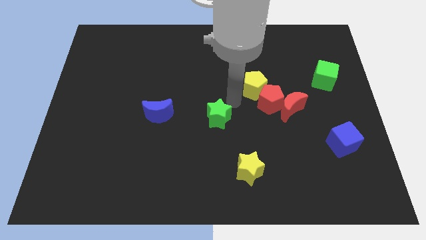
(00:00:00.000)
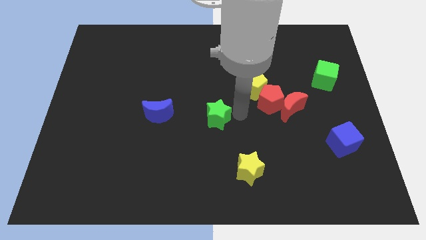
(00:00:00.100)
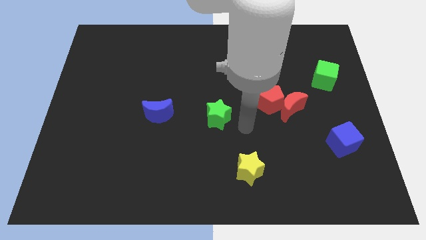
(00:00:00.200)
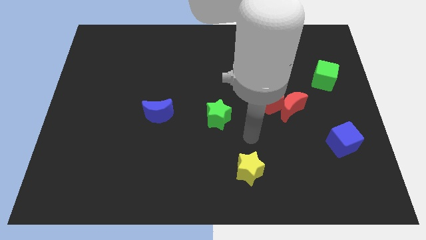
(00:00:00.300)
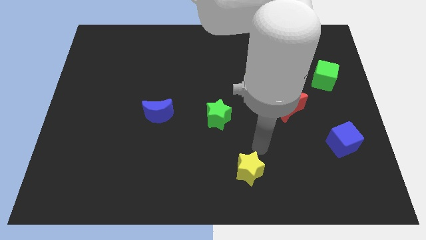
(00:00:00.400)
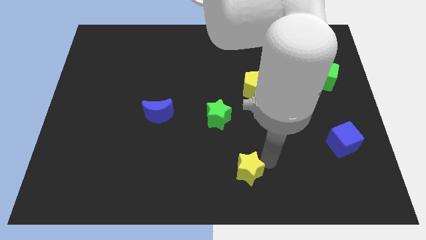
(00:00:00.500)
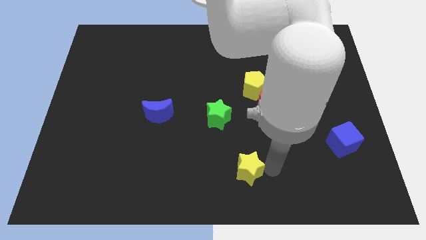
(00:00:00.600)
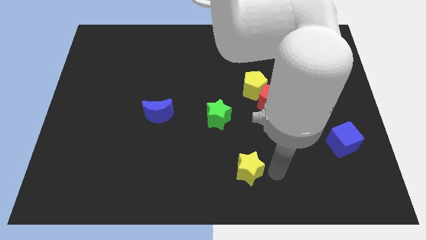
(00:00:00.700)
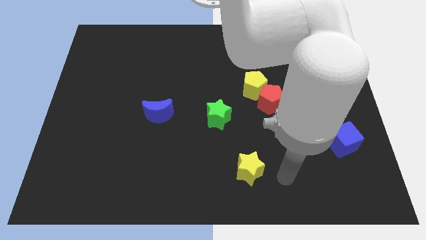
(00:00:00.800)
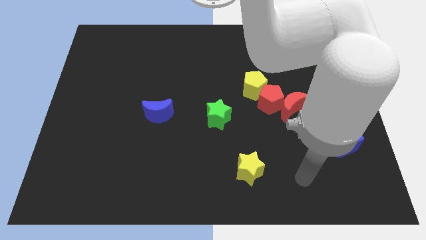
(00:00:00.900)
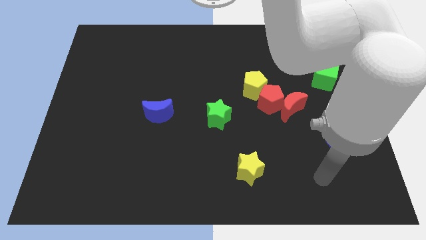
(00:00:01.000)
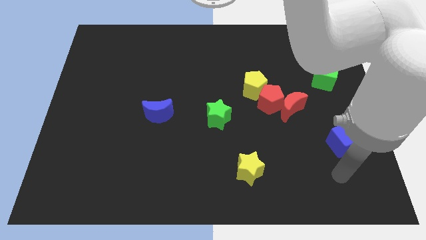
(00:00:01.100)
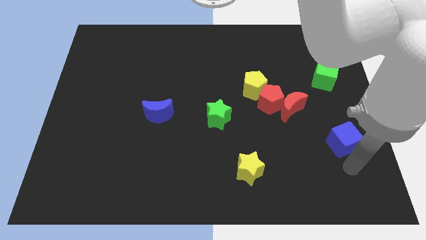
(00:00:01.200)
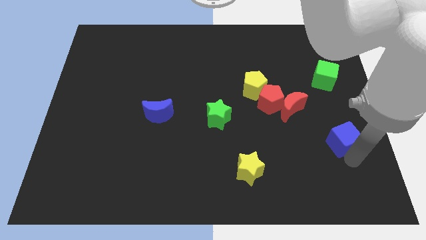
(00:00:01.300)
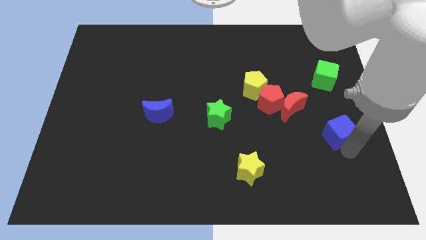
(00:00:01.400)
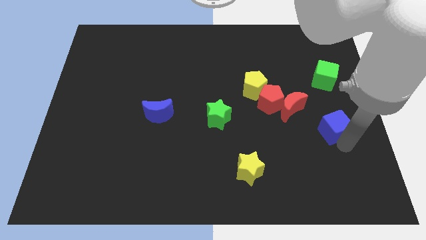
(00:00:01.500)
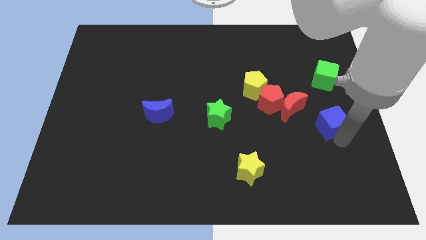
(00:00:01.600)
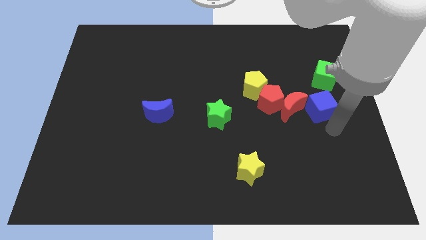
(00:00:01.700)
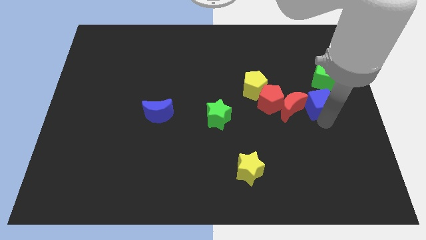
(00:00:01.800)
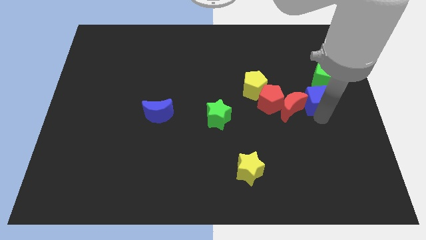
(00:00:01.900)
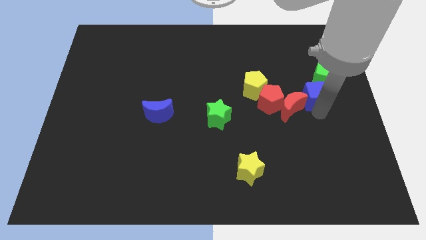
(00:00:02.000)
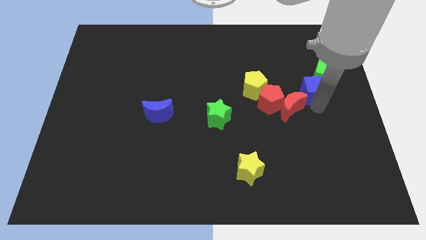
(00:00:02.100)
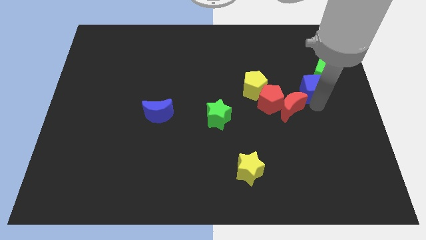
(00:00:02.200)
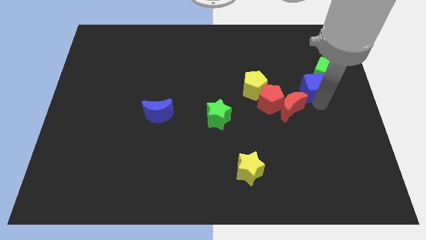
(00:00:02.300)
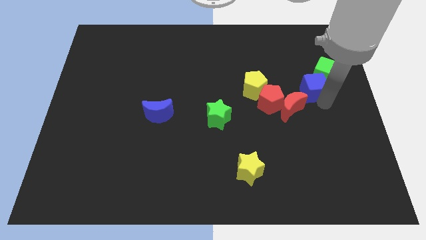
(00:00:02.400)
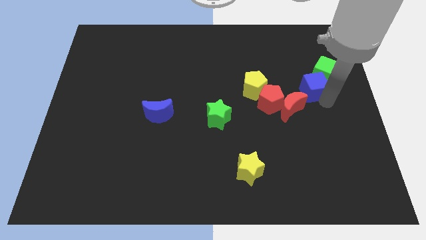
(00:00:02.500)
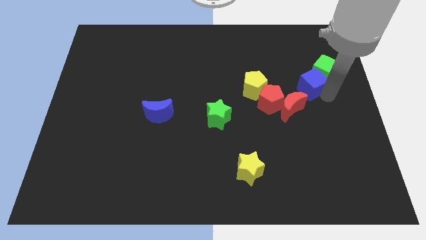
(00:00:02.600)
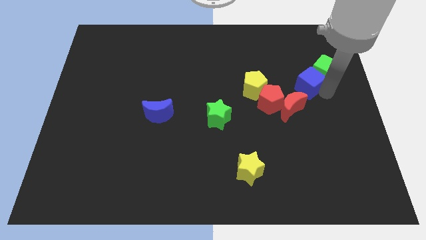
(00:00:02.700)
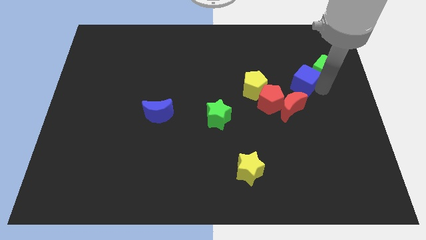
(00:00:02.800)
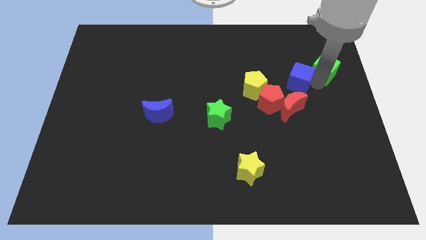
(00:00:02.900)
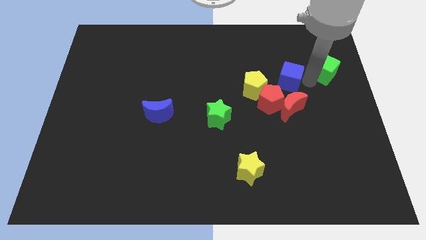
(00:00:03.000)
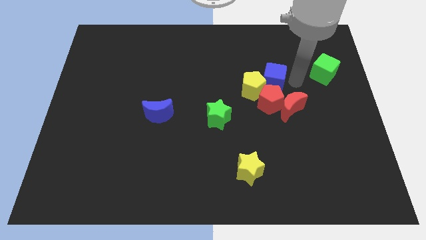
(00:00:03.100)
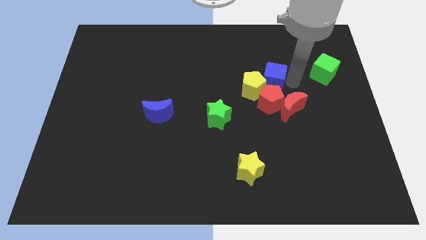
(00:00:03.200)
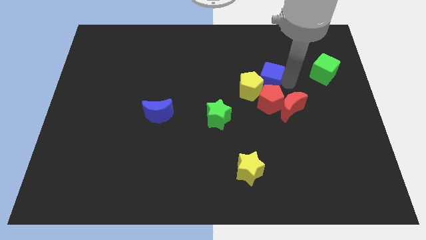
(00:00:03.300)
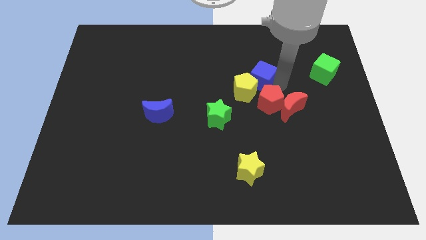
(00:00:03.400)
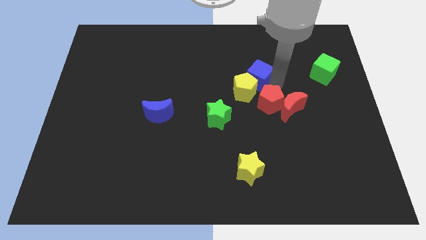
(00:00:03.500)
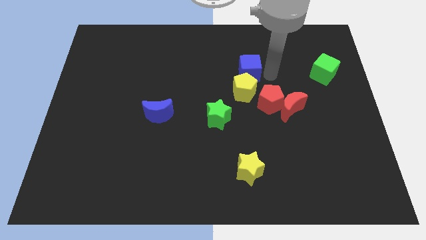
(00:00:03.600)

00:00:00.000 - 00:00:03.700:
push the blue cube into the yellow pentagon

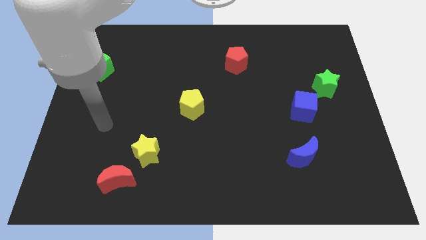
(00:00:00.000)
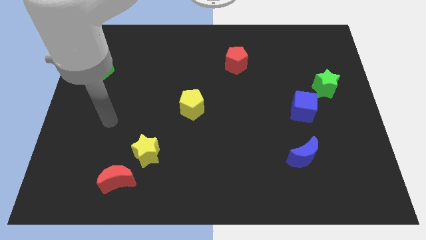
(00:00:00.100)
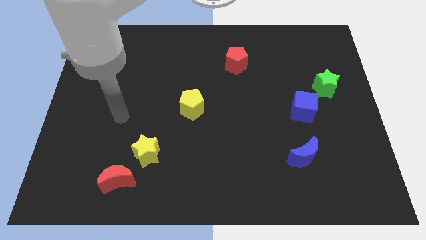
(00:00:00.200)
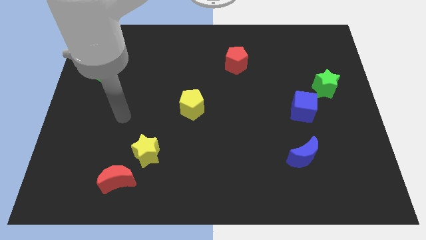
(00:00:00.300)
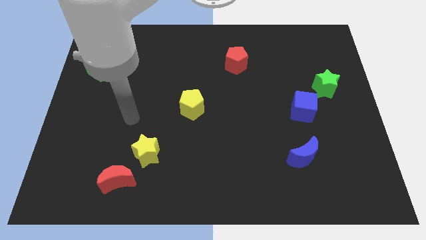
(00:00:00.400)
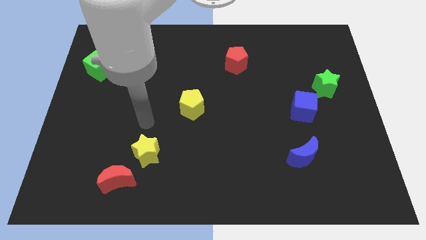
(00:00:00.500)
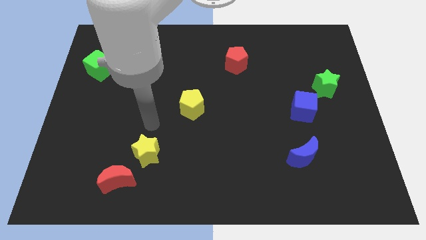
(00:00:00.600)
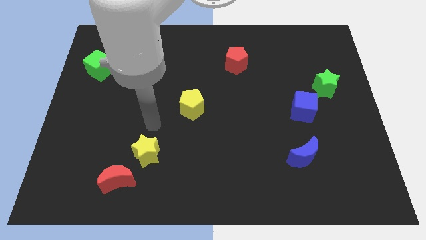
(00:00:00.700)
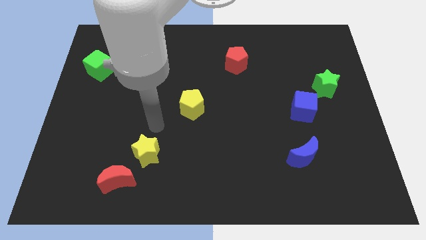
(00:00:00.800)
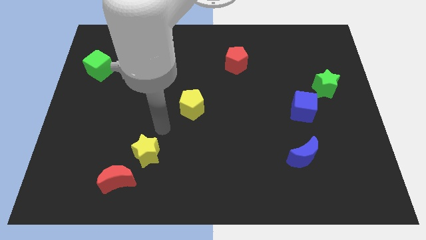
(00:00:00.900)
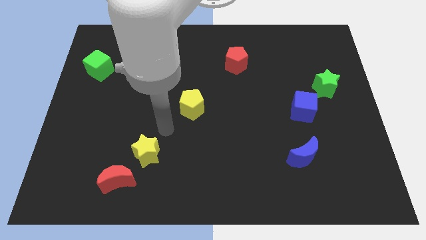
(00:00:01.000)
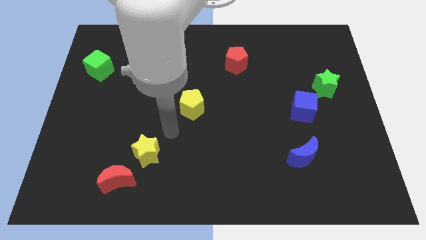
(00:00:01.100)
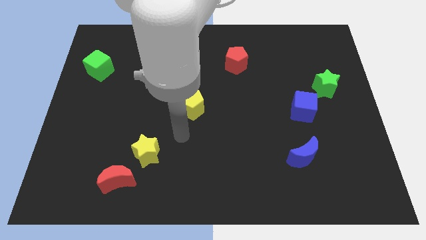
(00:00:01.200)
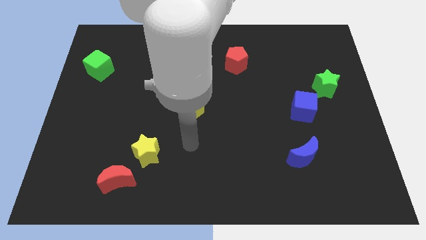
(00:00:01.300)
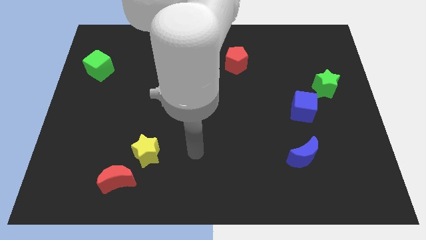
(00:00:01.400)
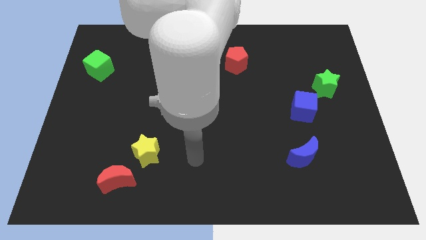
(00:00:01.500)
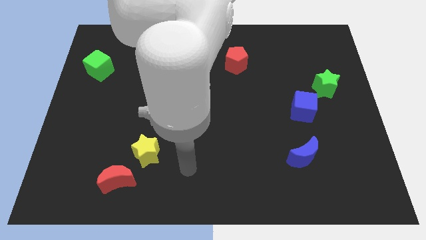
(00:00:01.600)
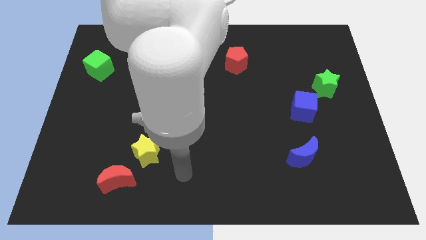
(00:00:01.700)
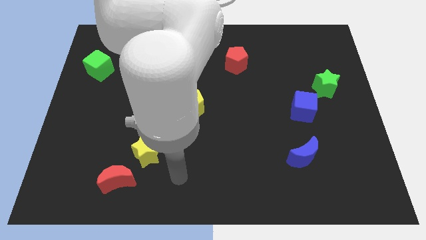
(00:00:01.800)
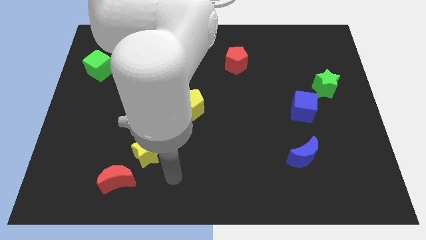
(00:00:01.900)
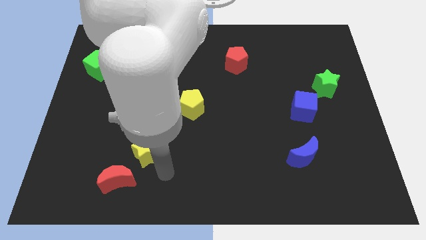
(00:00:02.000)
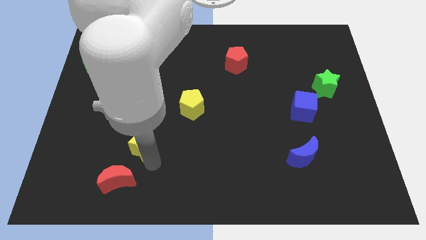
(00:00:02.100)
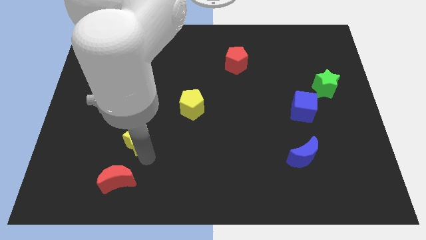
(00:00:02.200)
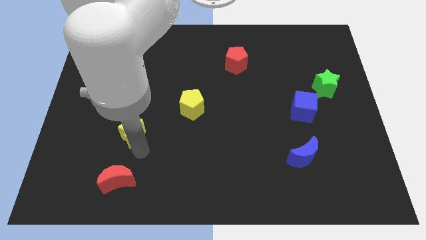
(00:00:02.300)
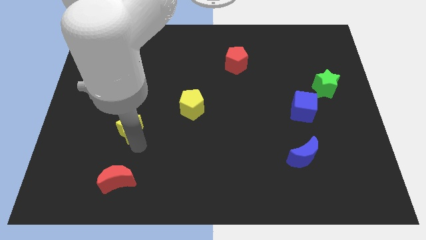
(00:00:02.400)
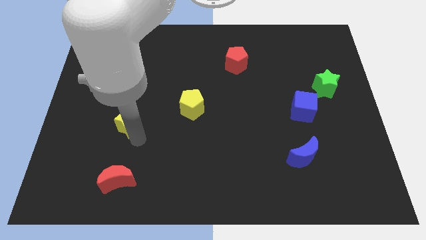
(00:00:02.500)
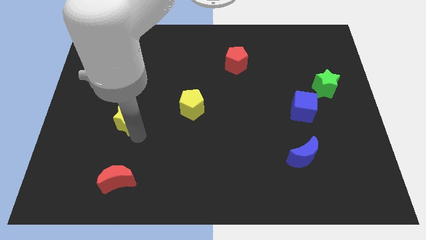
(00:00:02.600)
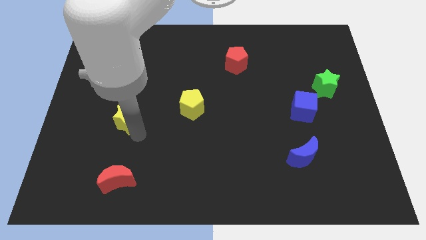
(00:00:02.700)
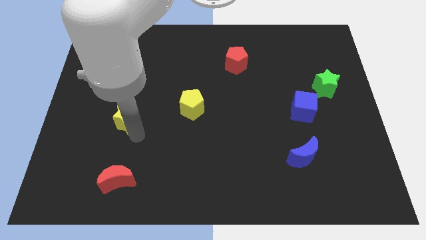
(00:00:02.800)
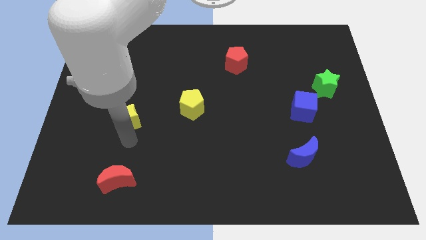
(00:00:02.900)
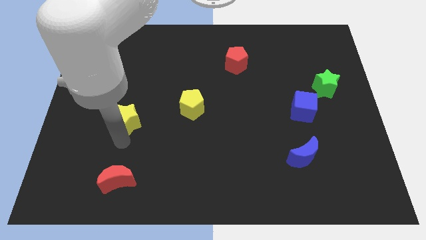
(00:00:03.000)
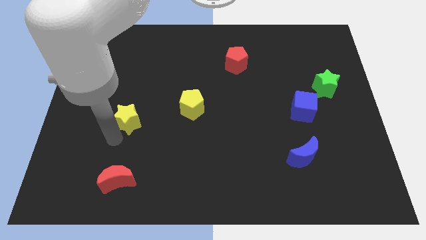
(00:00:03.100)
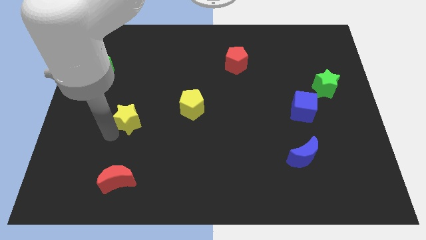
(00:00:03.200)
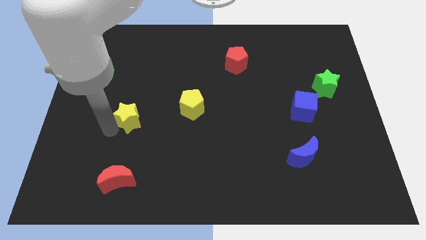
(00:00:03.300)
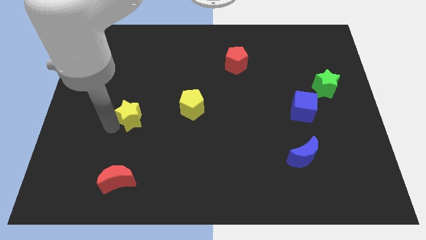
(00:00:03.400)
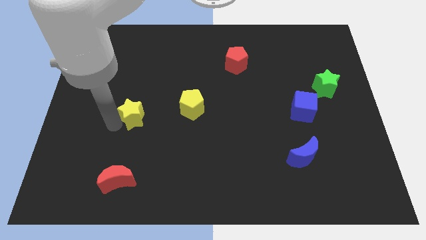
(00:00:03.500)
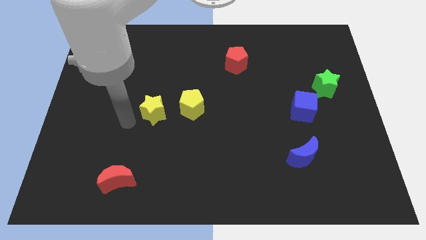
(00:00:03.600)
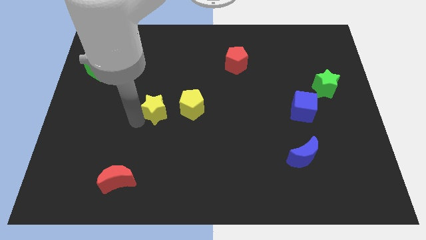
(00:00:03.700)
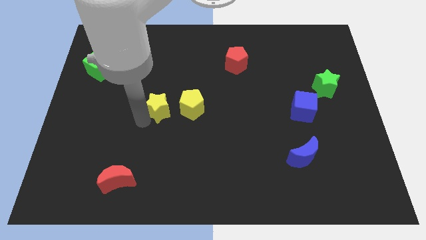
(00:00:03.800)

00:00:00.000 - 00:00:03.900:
place the yellow star to the left of yellow pentagon

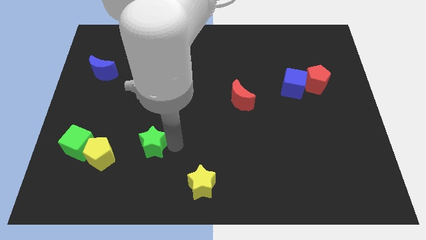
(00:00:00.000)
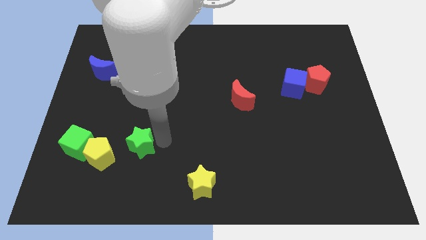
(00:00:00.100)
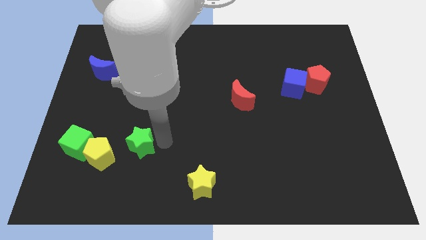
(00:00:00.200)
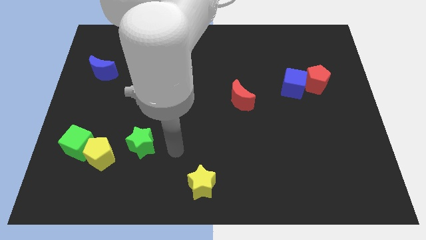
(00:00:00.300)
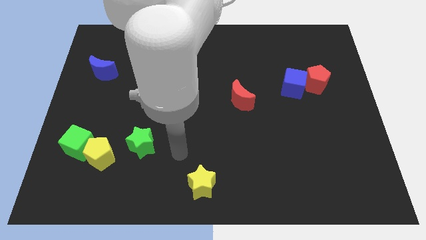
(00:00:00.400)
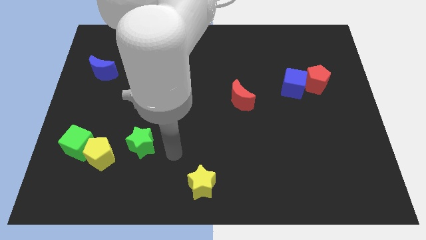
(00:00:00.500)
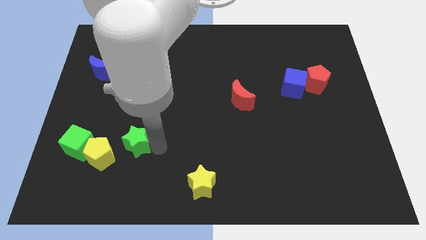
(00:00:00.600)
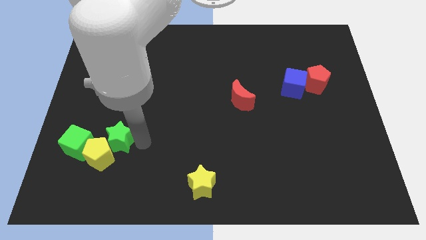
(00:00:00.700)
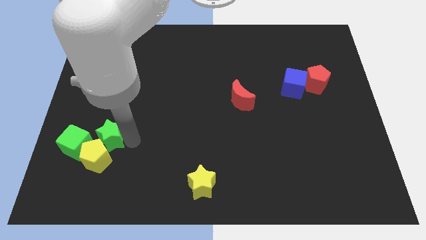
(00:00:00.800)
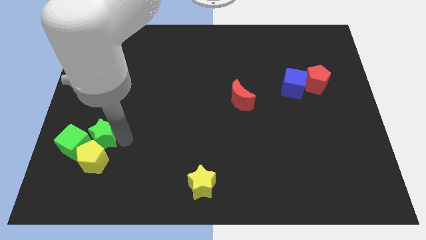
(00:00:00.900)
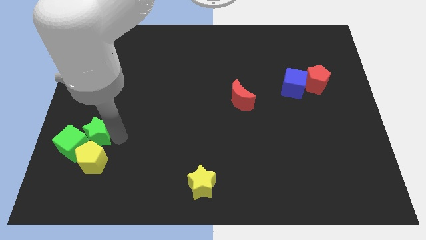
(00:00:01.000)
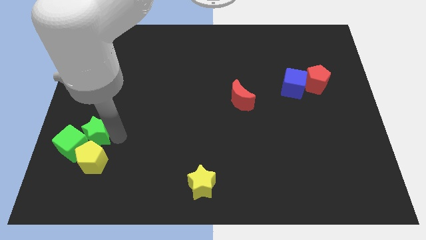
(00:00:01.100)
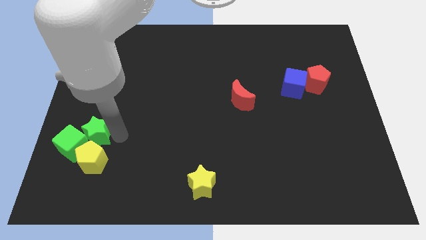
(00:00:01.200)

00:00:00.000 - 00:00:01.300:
push the green star to the top of the yellow pentagon
